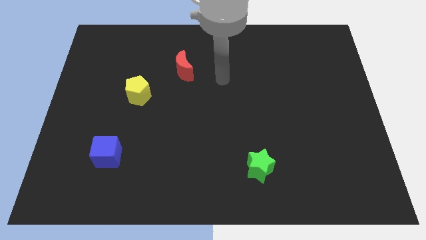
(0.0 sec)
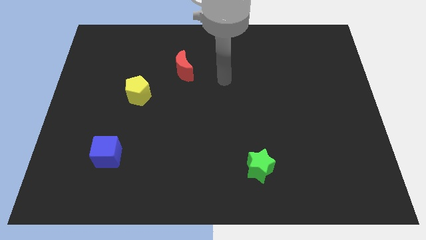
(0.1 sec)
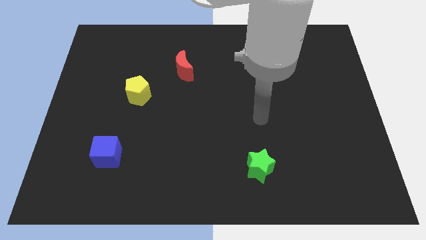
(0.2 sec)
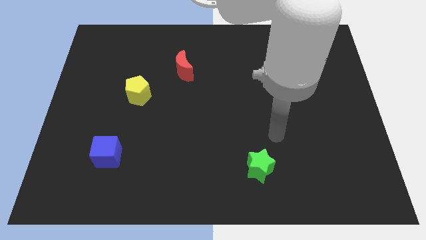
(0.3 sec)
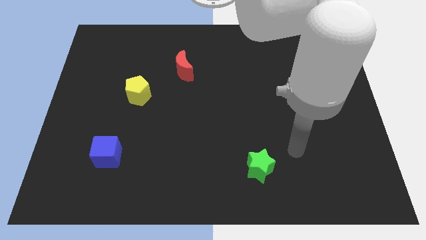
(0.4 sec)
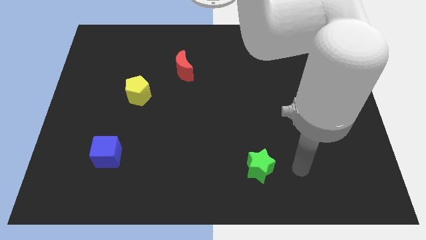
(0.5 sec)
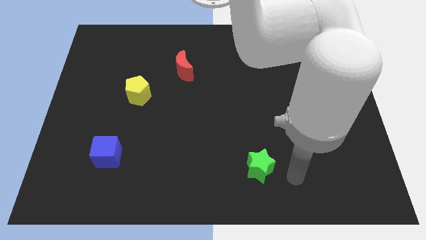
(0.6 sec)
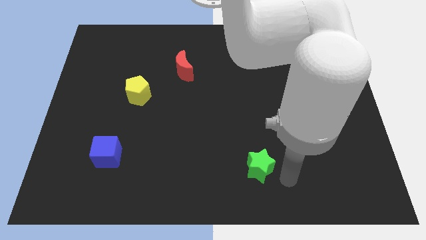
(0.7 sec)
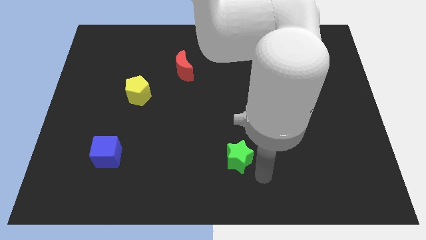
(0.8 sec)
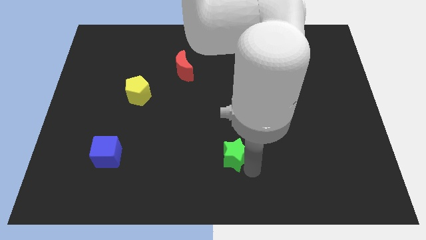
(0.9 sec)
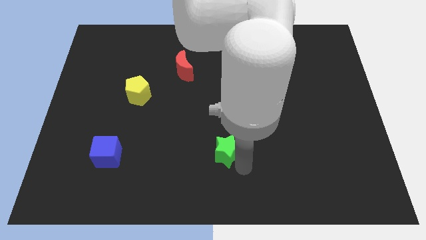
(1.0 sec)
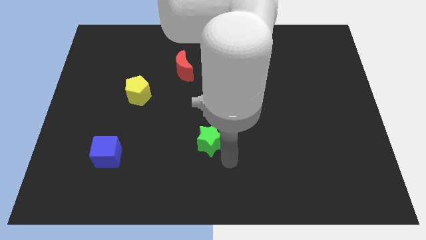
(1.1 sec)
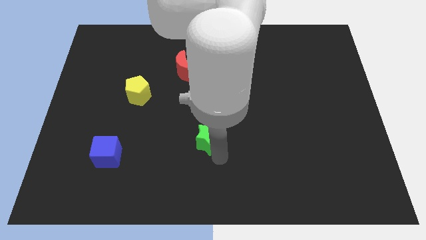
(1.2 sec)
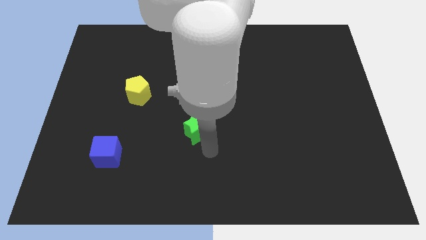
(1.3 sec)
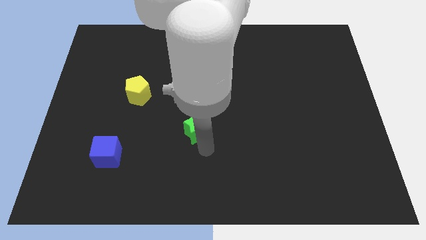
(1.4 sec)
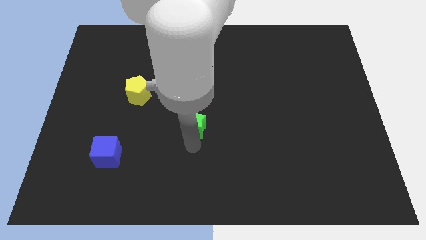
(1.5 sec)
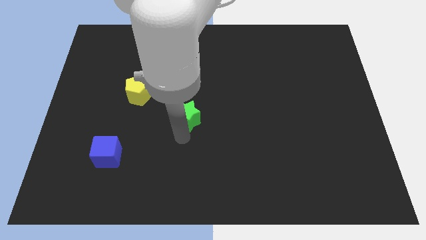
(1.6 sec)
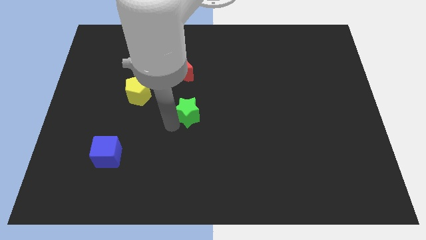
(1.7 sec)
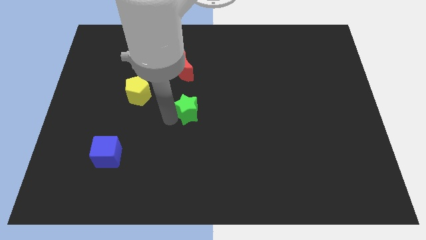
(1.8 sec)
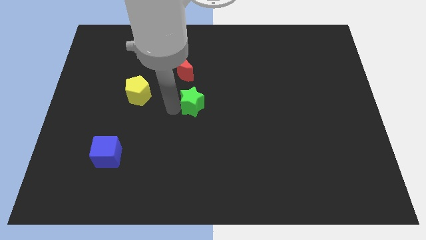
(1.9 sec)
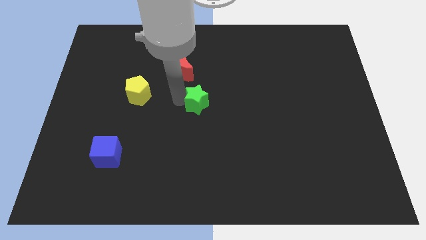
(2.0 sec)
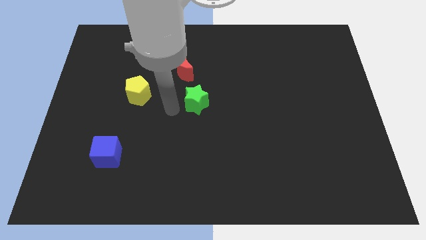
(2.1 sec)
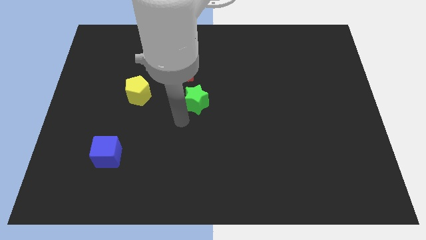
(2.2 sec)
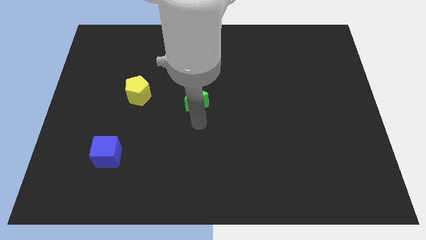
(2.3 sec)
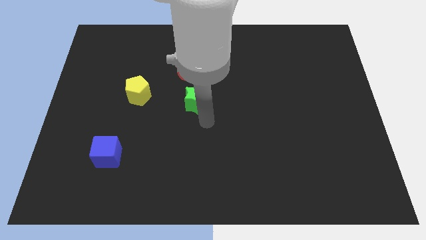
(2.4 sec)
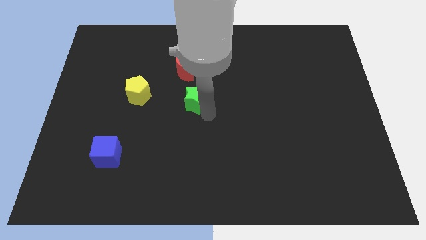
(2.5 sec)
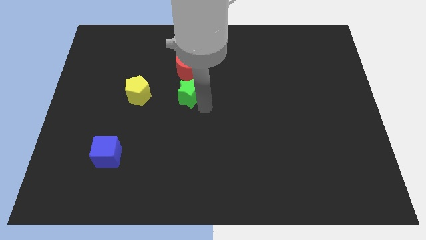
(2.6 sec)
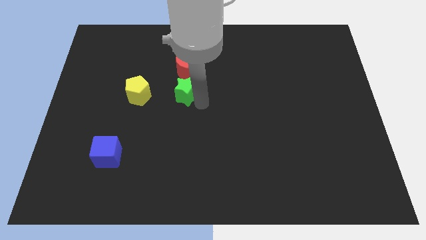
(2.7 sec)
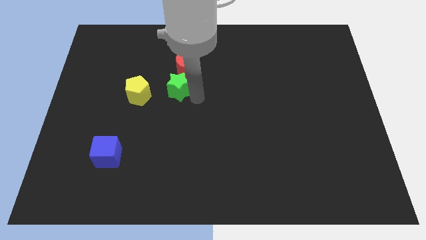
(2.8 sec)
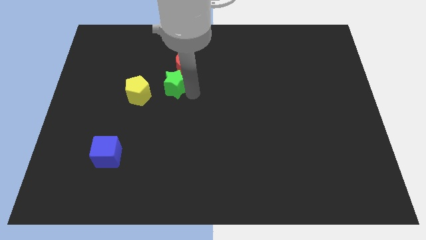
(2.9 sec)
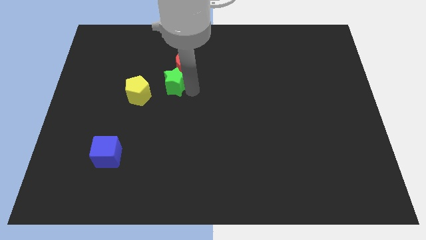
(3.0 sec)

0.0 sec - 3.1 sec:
move the star next to the moon

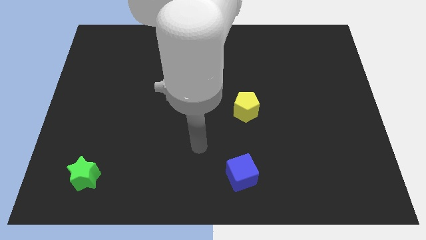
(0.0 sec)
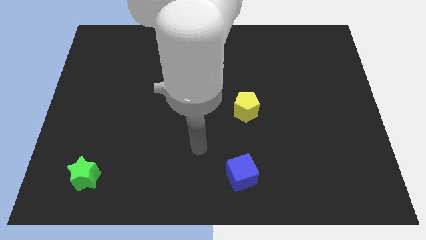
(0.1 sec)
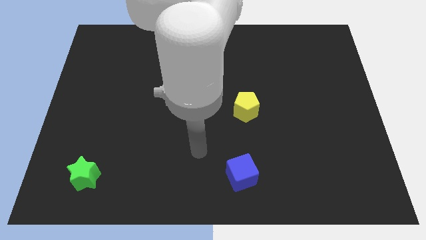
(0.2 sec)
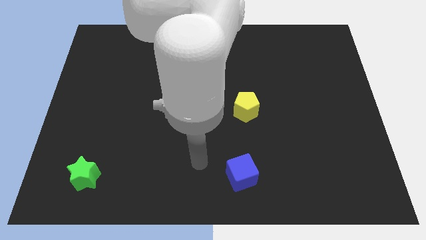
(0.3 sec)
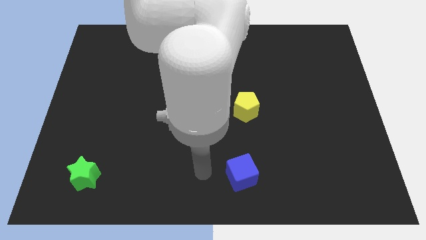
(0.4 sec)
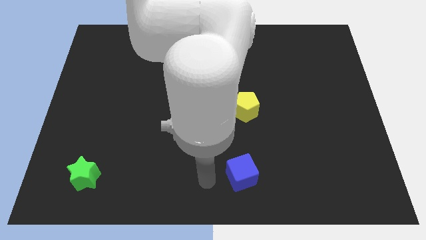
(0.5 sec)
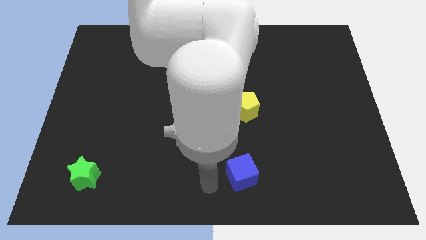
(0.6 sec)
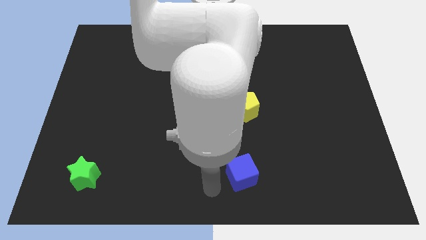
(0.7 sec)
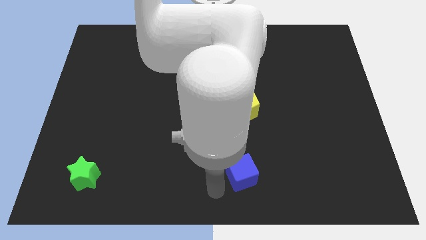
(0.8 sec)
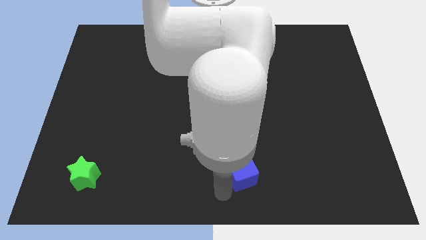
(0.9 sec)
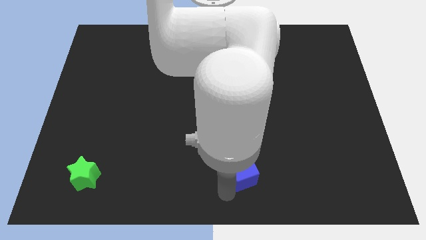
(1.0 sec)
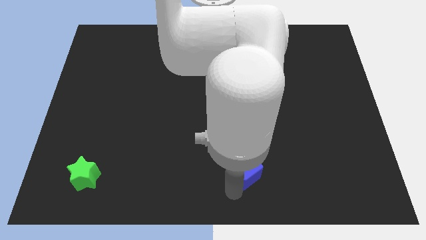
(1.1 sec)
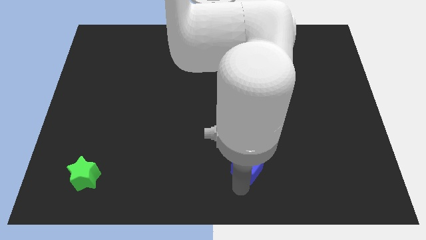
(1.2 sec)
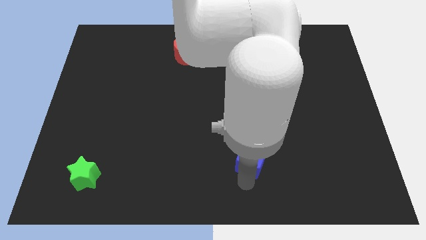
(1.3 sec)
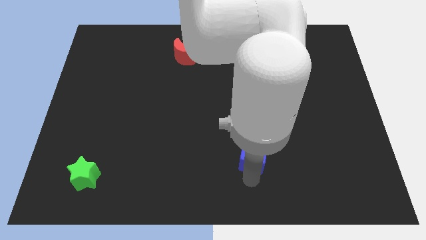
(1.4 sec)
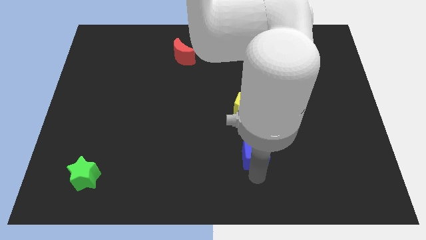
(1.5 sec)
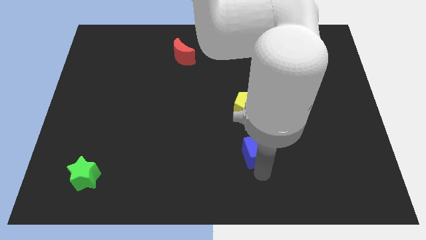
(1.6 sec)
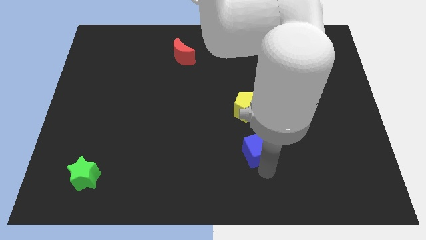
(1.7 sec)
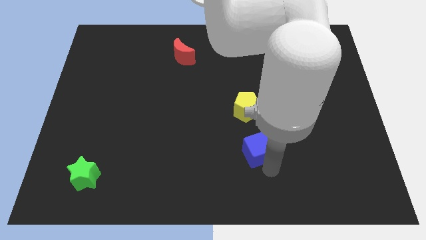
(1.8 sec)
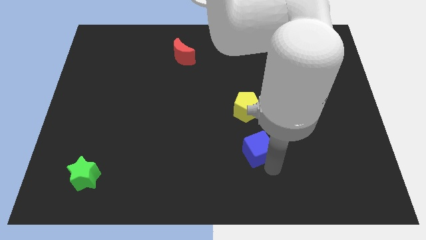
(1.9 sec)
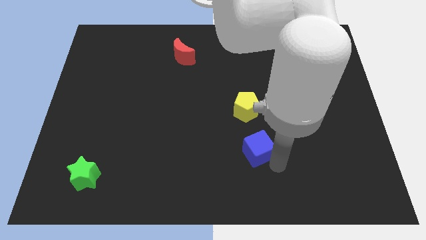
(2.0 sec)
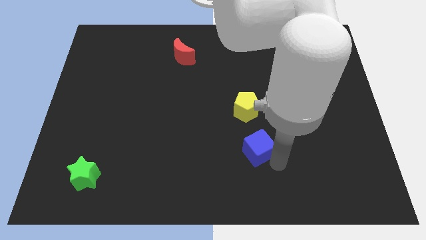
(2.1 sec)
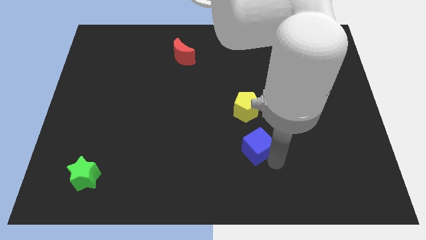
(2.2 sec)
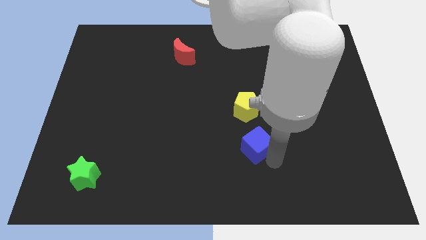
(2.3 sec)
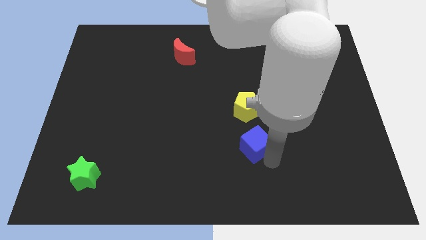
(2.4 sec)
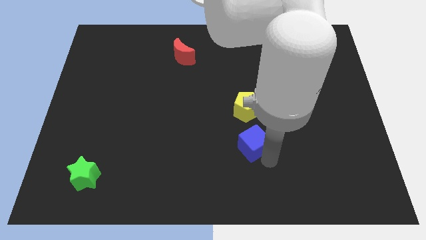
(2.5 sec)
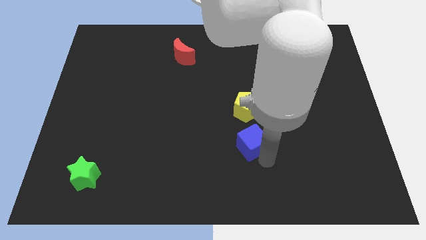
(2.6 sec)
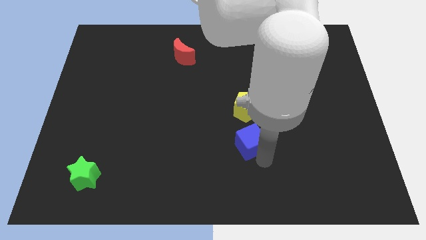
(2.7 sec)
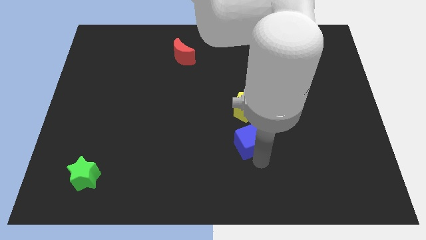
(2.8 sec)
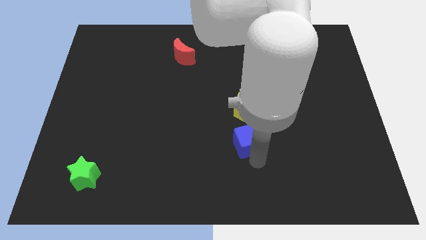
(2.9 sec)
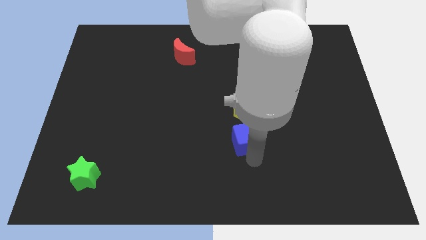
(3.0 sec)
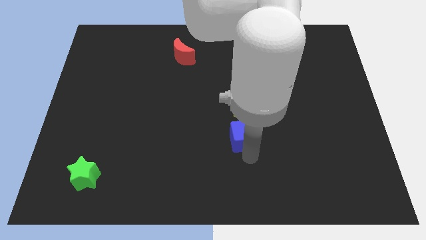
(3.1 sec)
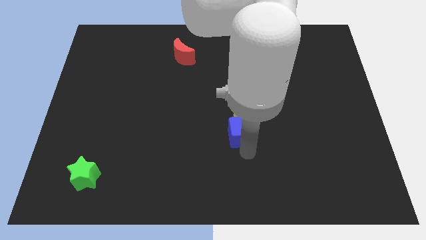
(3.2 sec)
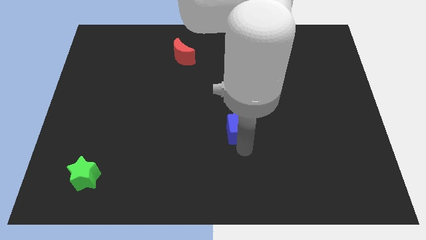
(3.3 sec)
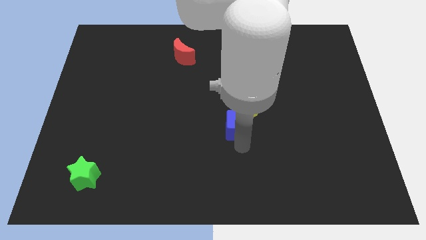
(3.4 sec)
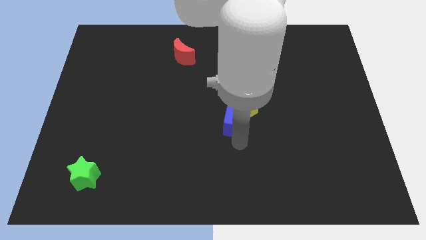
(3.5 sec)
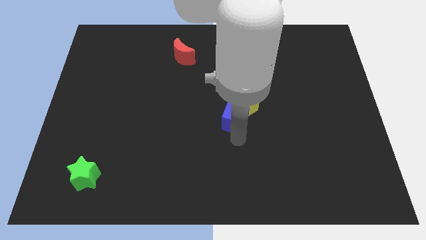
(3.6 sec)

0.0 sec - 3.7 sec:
move the blue block towards the yellow pentagon

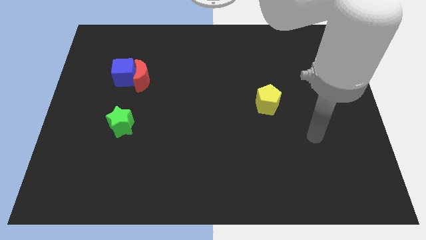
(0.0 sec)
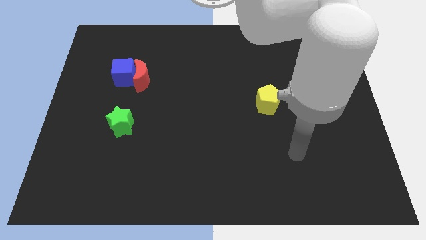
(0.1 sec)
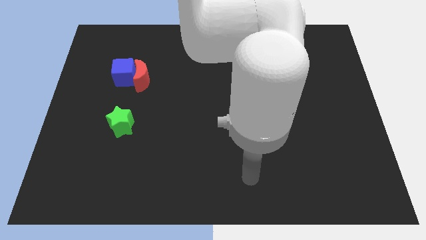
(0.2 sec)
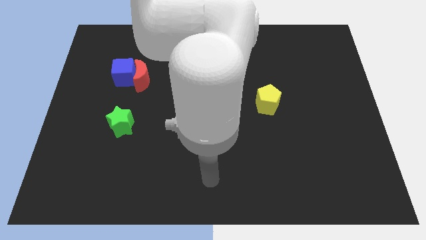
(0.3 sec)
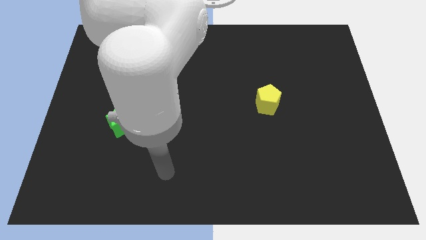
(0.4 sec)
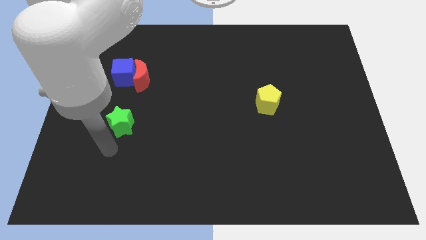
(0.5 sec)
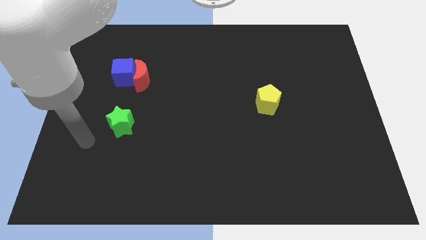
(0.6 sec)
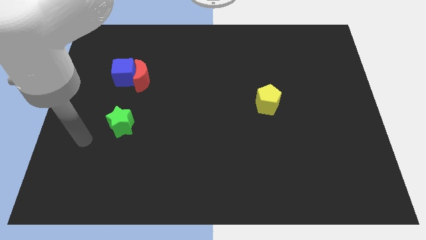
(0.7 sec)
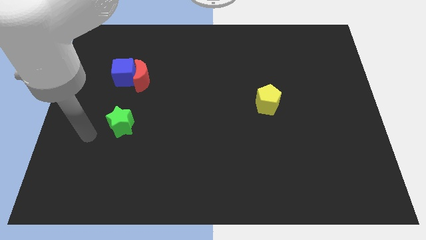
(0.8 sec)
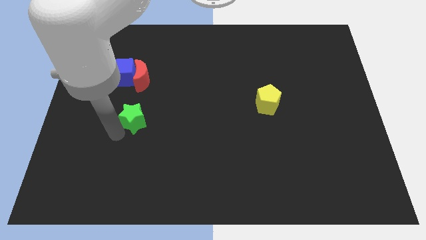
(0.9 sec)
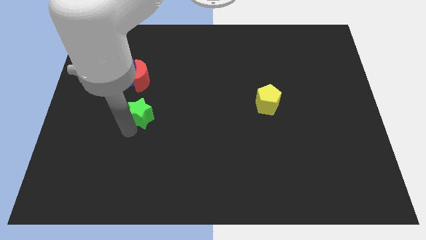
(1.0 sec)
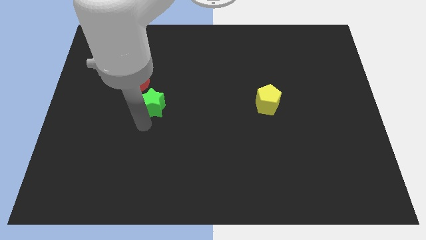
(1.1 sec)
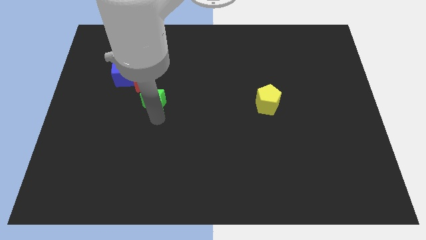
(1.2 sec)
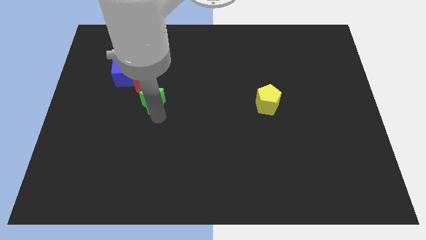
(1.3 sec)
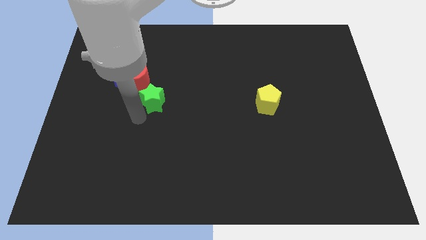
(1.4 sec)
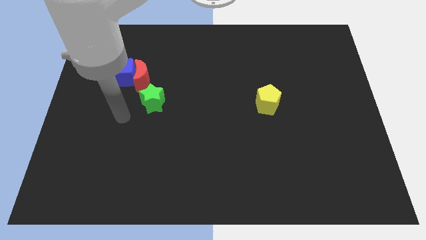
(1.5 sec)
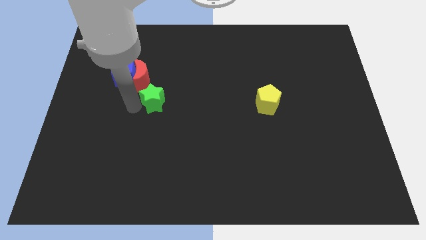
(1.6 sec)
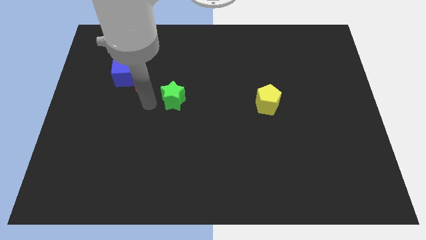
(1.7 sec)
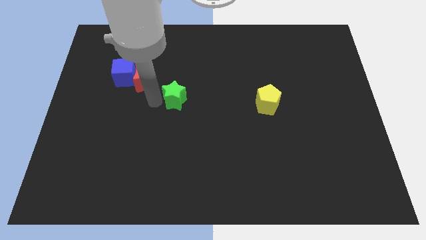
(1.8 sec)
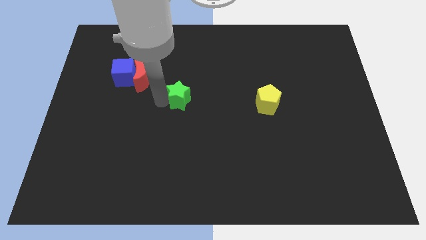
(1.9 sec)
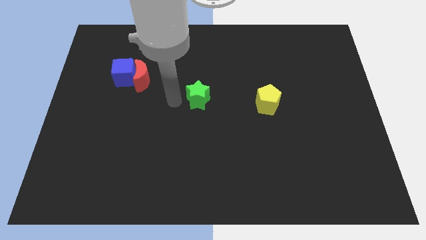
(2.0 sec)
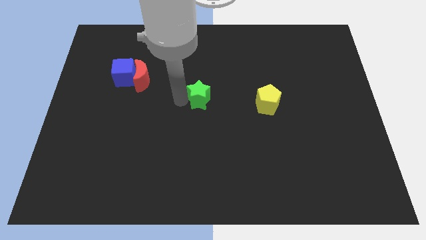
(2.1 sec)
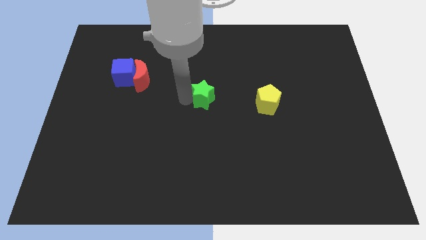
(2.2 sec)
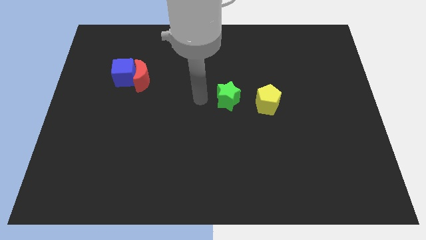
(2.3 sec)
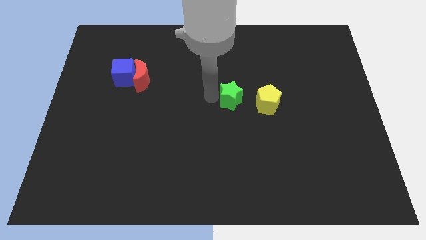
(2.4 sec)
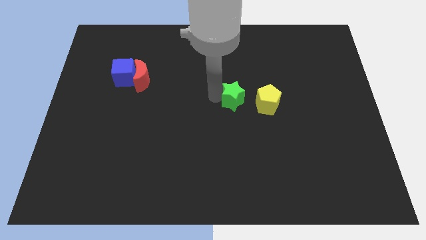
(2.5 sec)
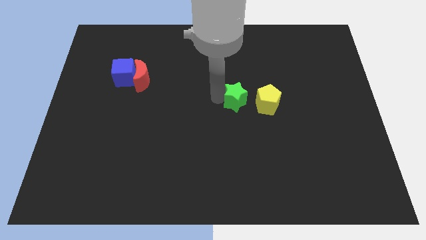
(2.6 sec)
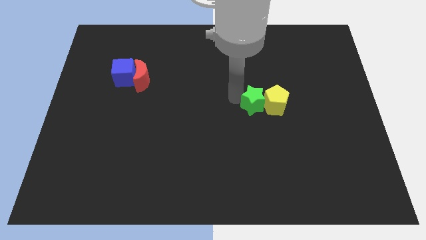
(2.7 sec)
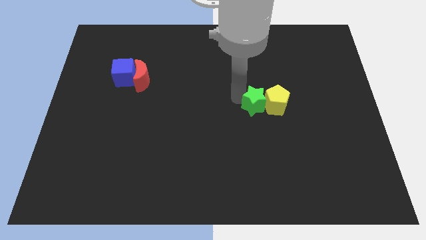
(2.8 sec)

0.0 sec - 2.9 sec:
slide the green block to the pentagon
